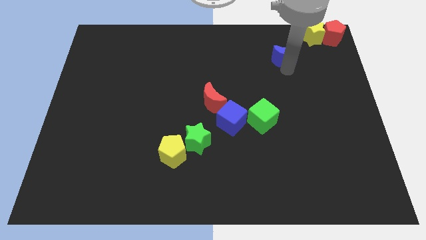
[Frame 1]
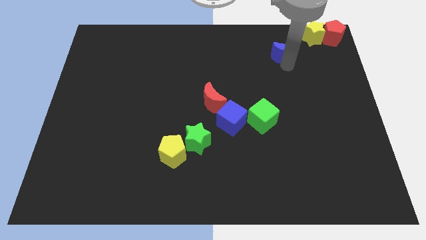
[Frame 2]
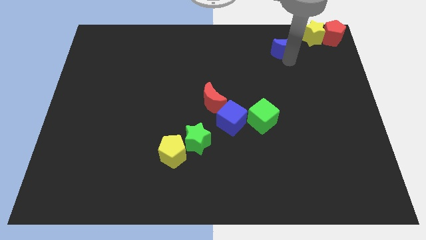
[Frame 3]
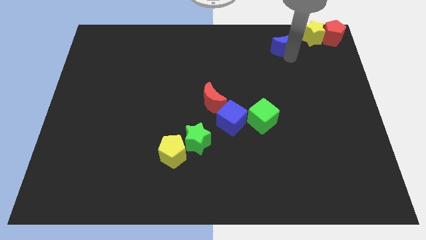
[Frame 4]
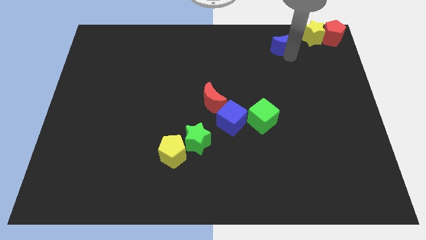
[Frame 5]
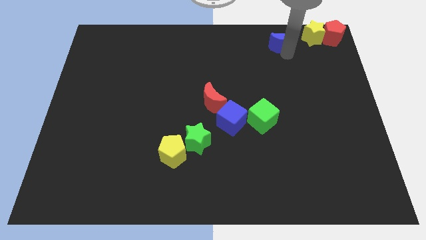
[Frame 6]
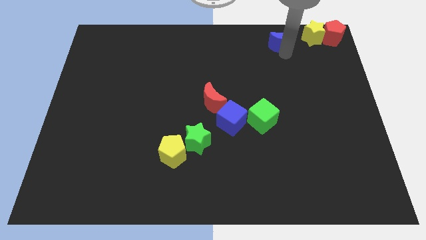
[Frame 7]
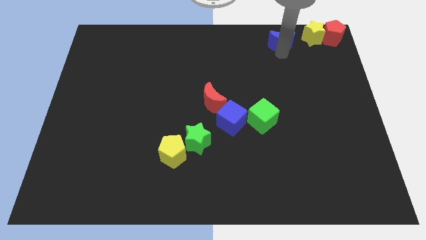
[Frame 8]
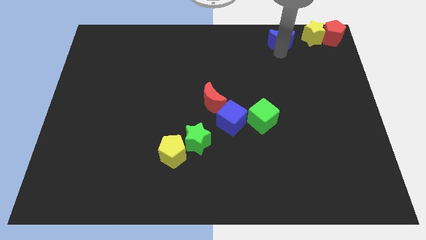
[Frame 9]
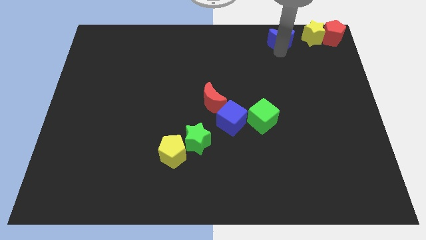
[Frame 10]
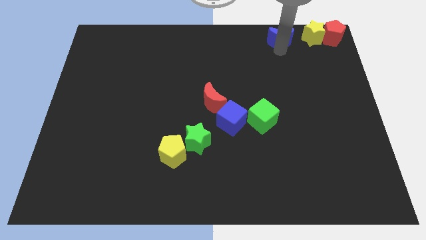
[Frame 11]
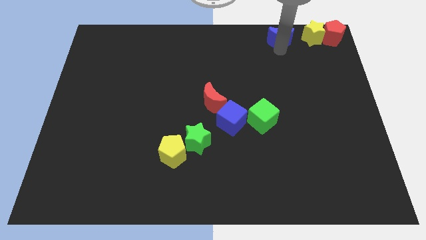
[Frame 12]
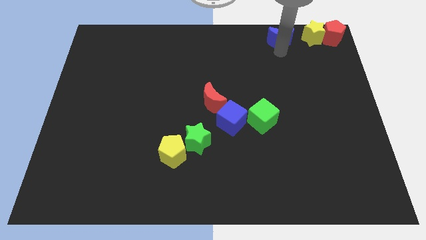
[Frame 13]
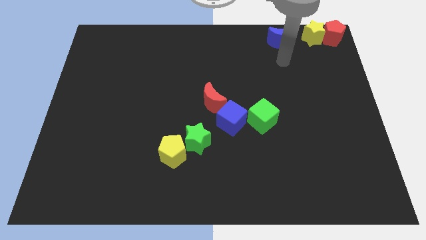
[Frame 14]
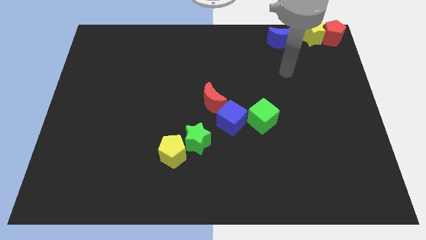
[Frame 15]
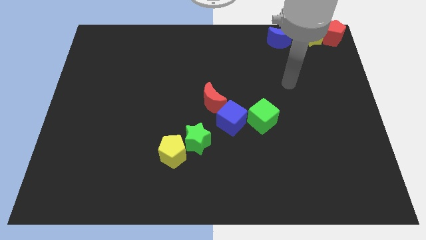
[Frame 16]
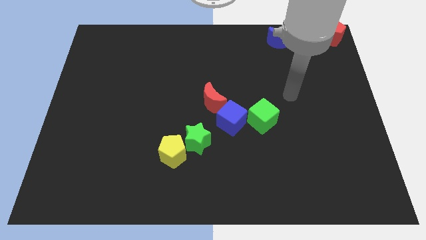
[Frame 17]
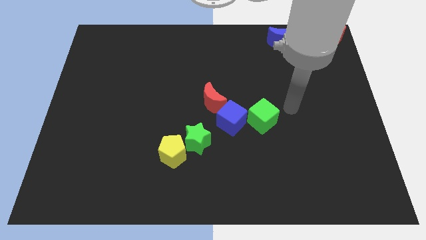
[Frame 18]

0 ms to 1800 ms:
place the blue moon to the left of the yellow star

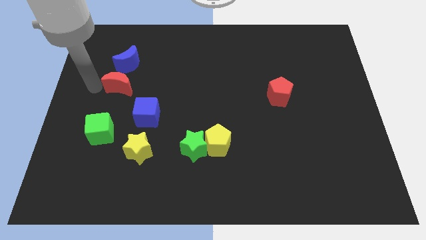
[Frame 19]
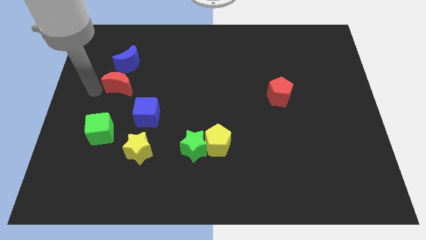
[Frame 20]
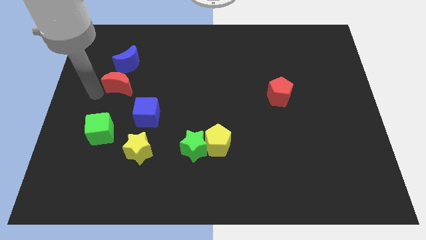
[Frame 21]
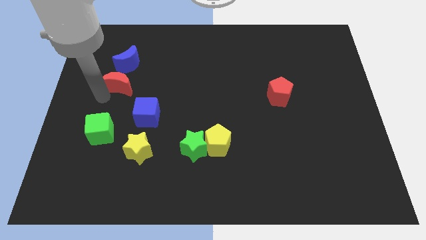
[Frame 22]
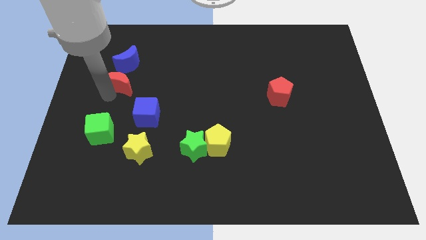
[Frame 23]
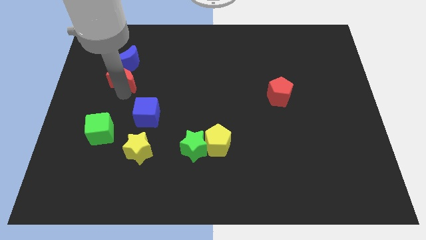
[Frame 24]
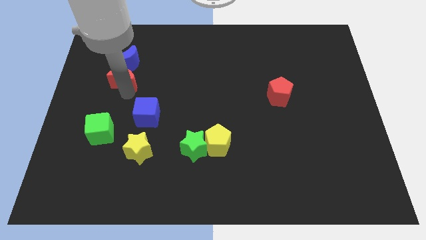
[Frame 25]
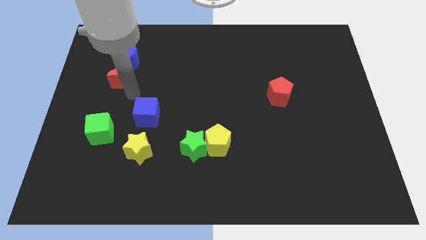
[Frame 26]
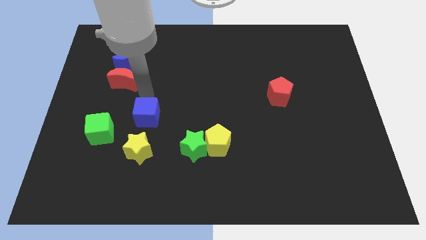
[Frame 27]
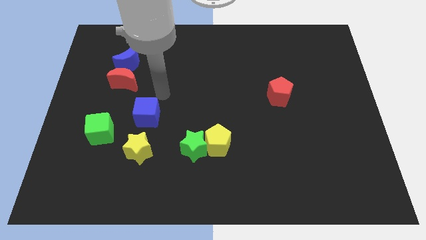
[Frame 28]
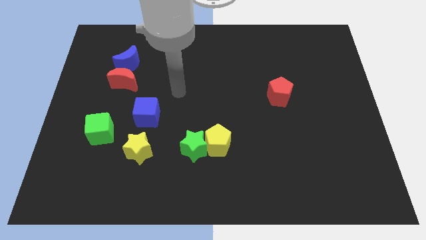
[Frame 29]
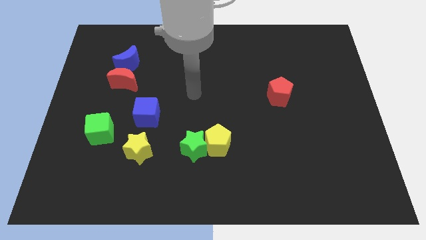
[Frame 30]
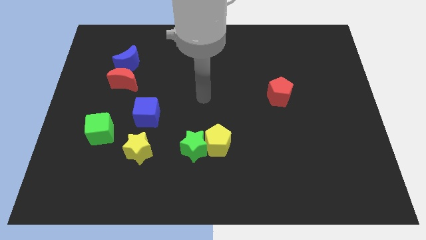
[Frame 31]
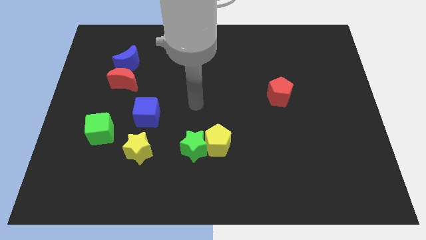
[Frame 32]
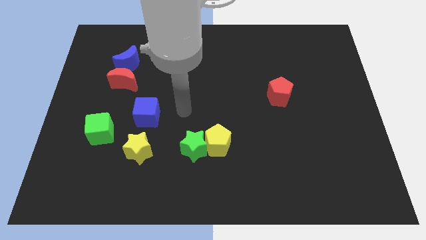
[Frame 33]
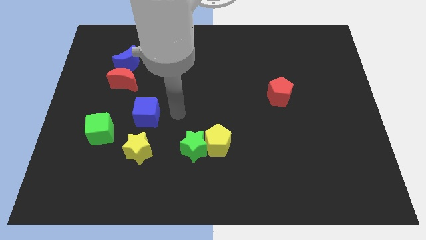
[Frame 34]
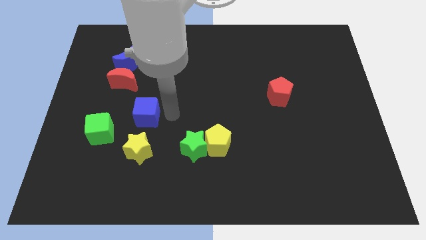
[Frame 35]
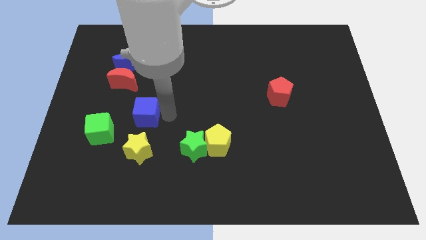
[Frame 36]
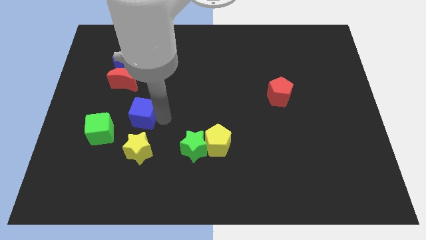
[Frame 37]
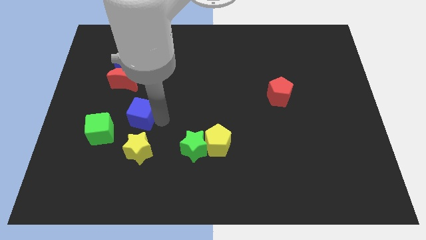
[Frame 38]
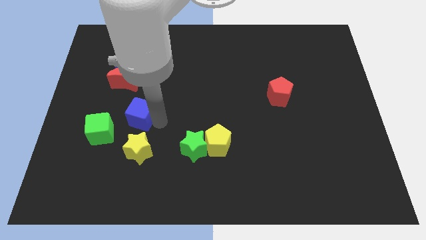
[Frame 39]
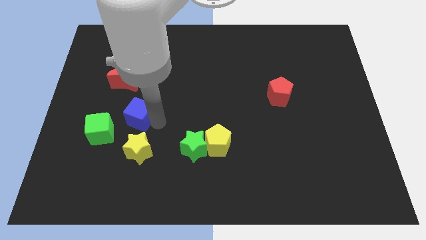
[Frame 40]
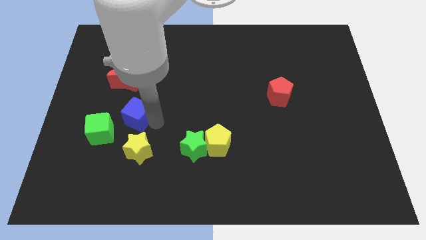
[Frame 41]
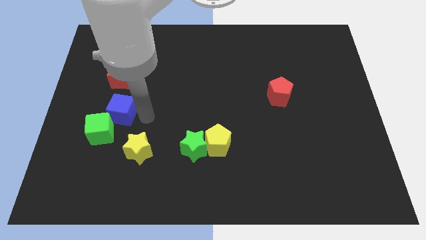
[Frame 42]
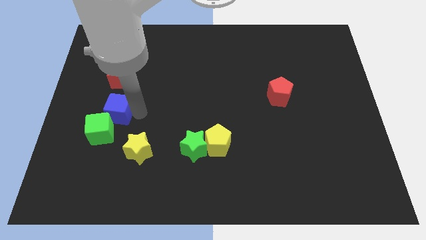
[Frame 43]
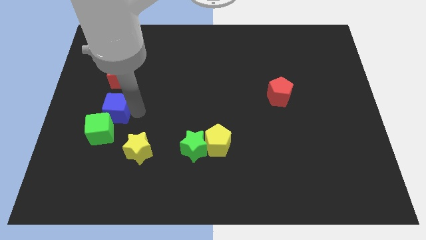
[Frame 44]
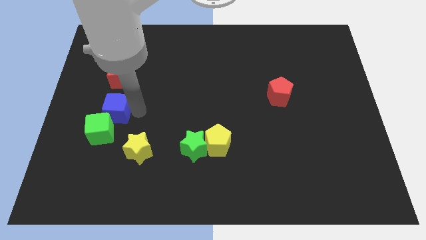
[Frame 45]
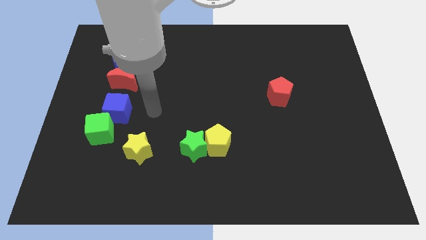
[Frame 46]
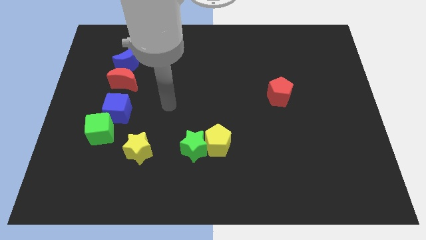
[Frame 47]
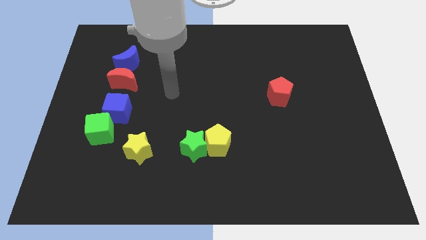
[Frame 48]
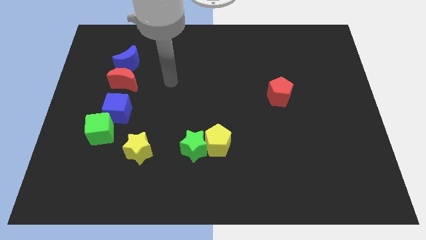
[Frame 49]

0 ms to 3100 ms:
place blue cube vertically below the red crescent

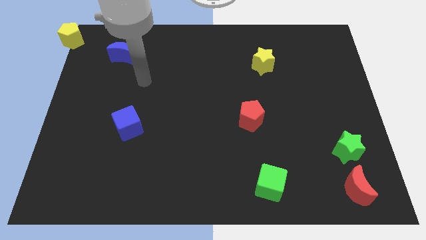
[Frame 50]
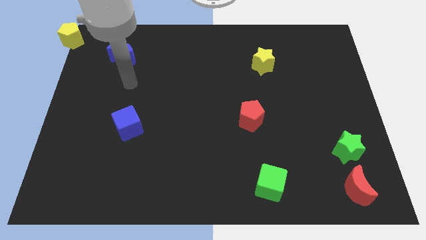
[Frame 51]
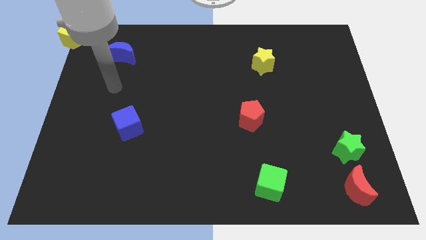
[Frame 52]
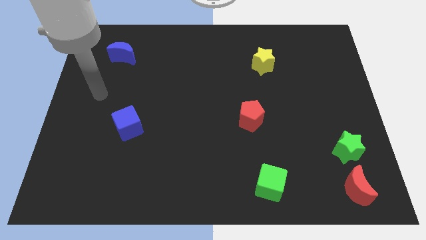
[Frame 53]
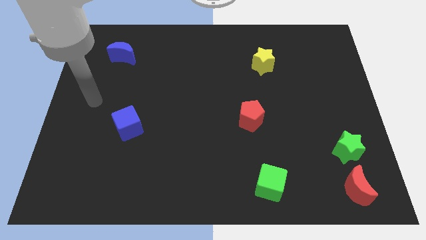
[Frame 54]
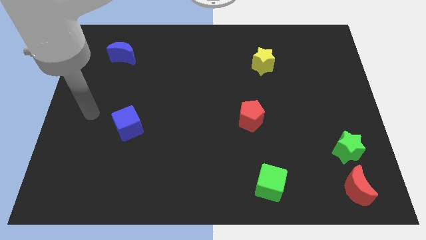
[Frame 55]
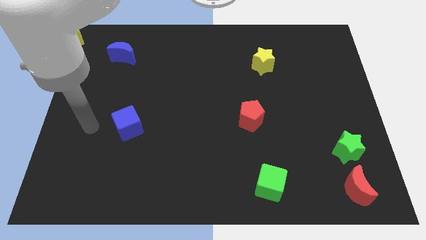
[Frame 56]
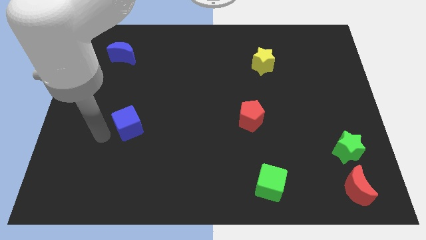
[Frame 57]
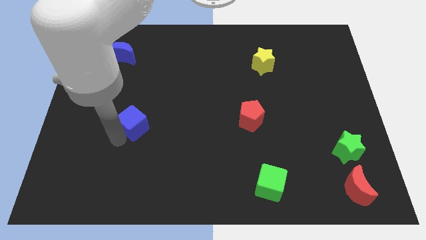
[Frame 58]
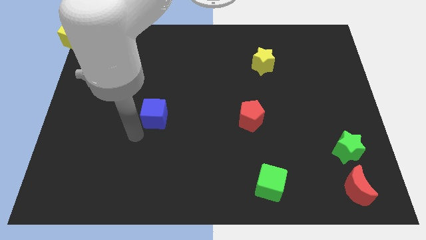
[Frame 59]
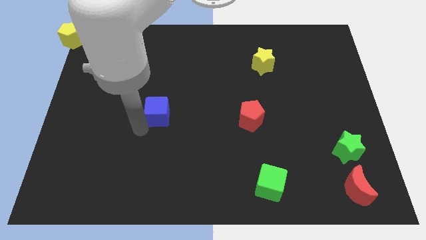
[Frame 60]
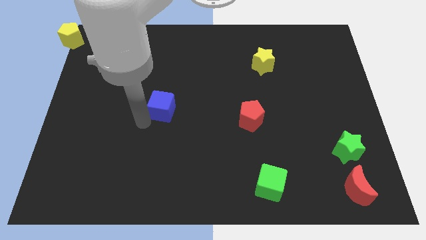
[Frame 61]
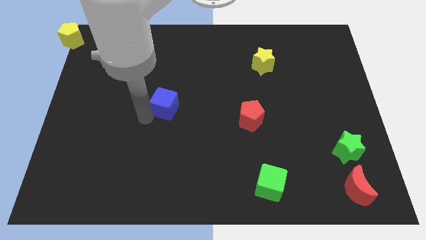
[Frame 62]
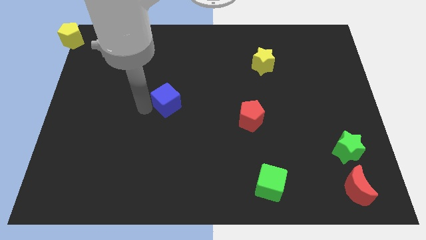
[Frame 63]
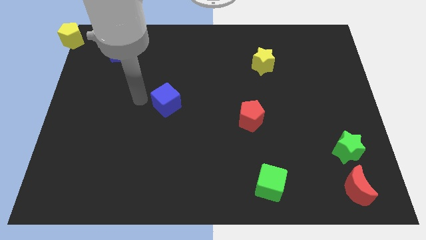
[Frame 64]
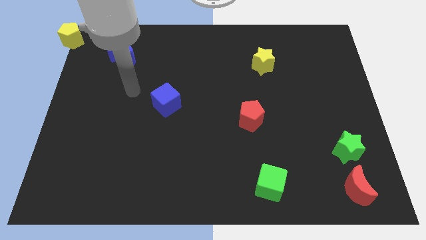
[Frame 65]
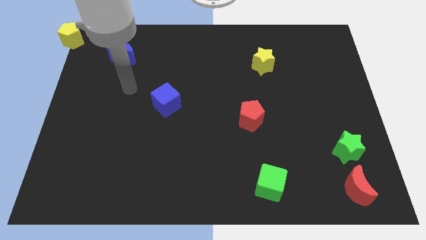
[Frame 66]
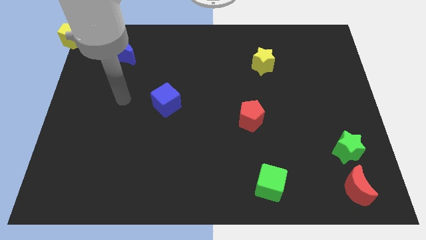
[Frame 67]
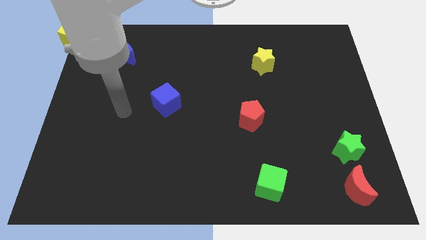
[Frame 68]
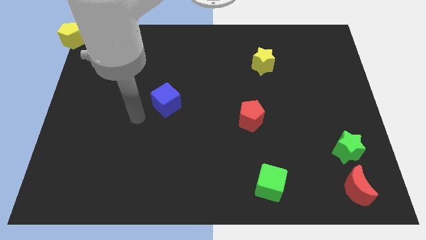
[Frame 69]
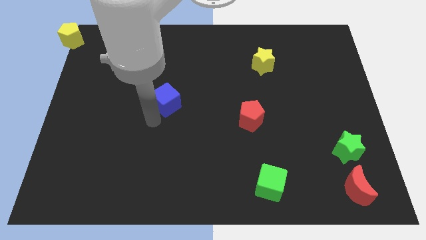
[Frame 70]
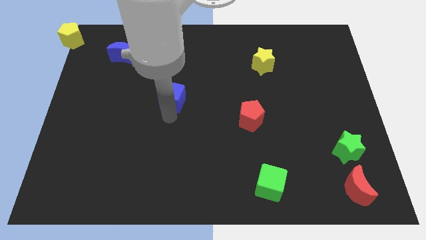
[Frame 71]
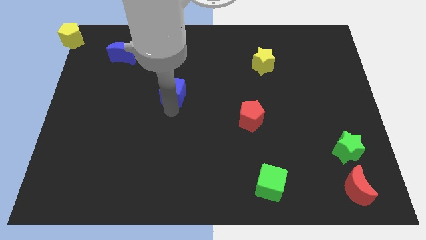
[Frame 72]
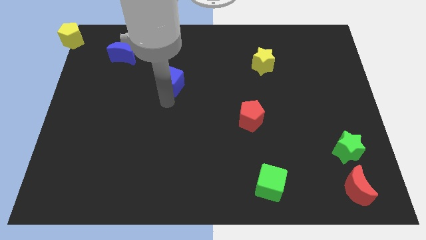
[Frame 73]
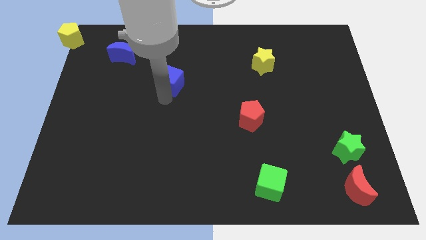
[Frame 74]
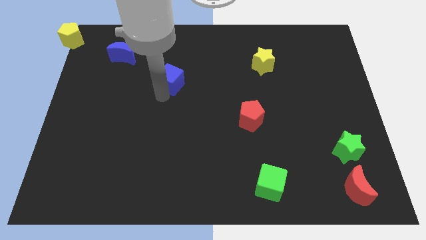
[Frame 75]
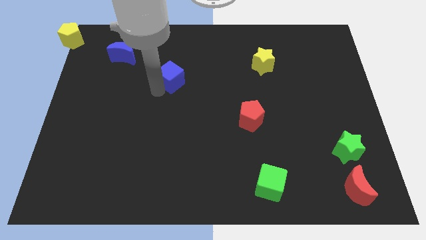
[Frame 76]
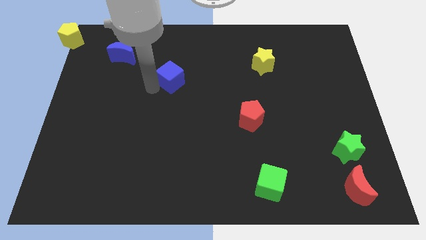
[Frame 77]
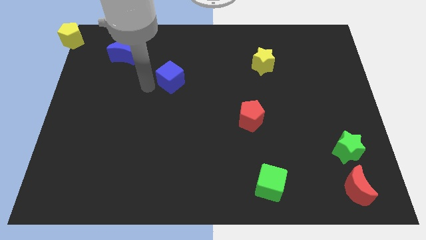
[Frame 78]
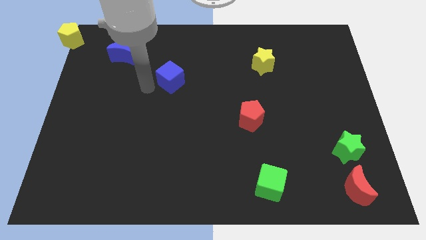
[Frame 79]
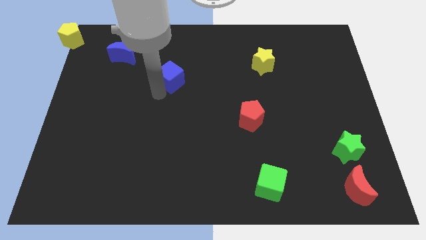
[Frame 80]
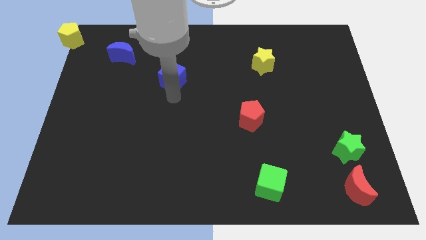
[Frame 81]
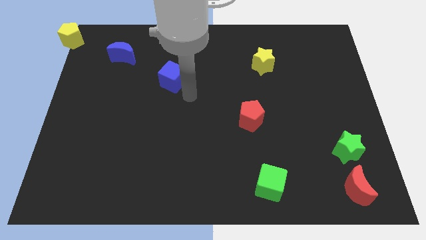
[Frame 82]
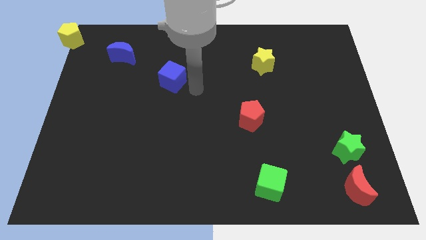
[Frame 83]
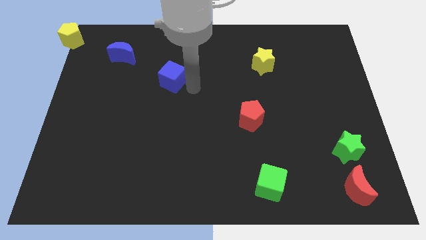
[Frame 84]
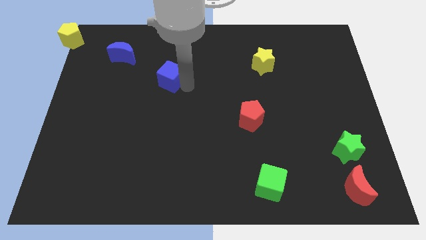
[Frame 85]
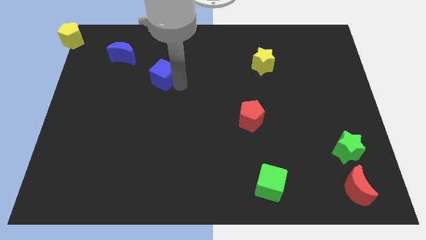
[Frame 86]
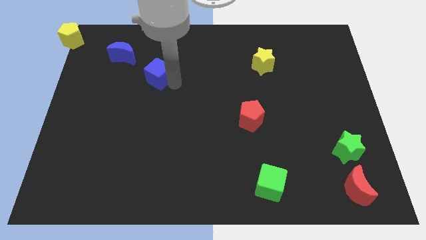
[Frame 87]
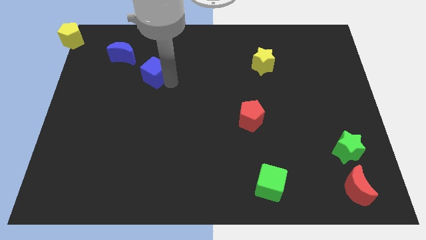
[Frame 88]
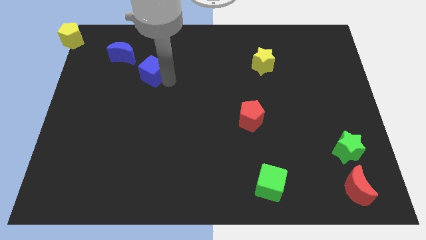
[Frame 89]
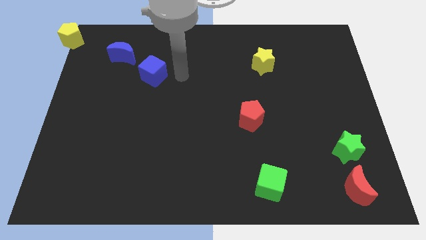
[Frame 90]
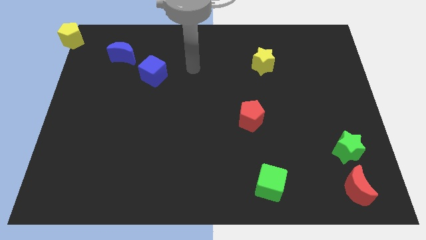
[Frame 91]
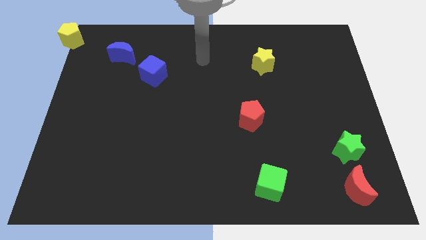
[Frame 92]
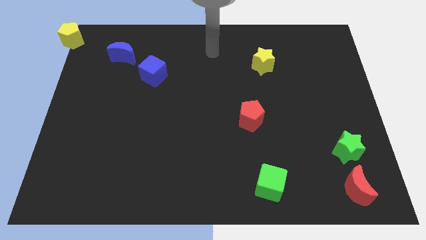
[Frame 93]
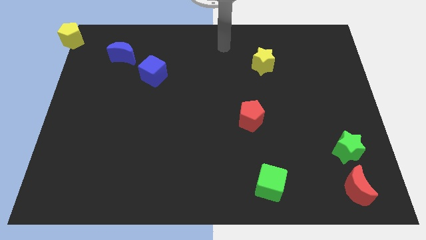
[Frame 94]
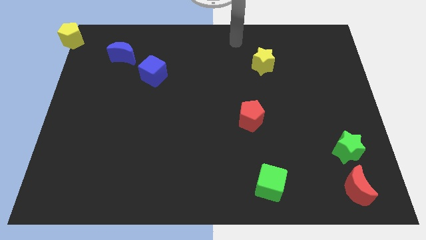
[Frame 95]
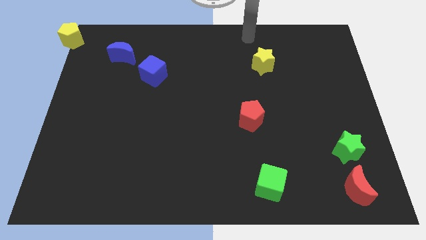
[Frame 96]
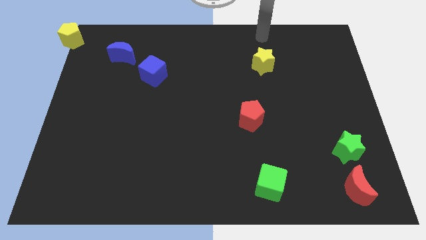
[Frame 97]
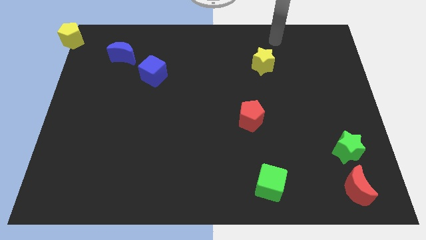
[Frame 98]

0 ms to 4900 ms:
place the blue cube diagonally to the blue crescent
